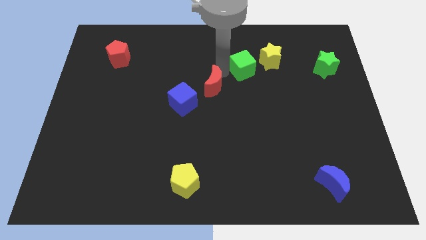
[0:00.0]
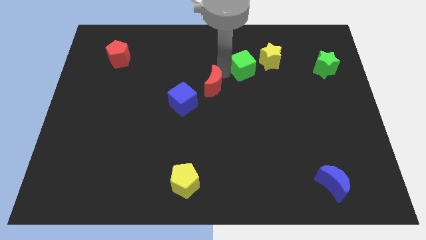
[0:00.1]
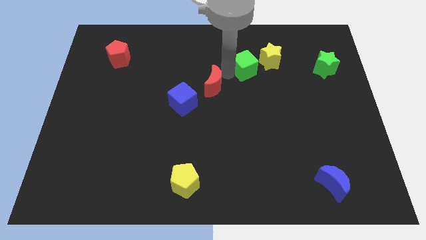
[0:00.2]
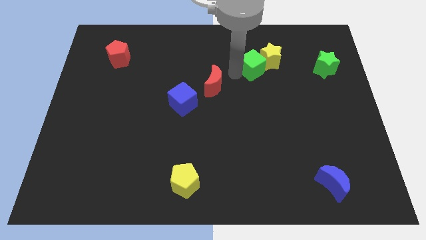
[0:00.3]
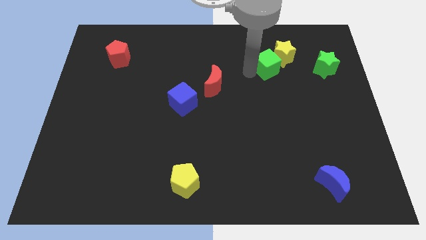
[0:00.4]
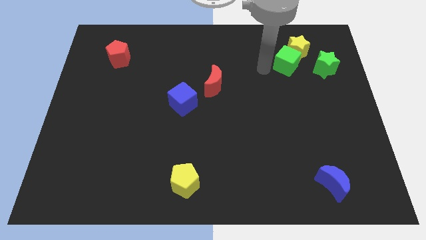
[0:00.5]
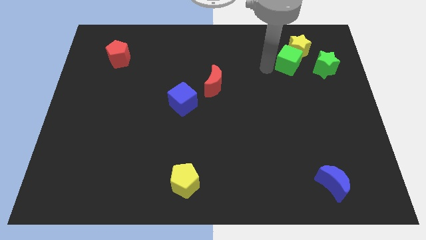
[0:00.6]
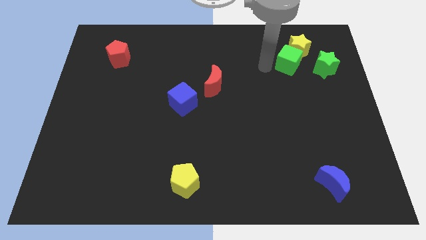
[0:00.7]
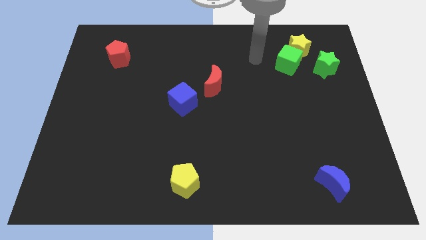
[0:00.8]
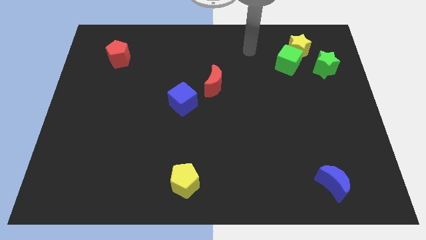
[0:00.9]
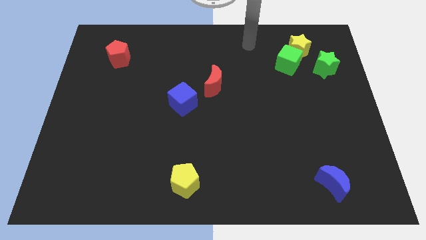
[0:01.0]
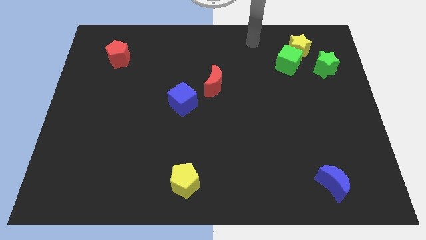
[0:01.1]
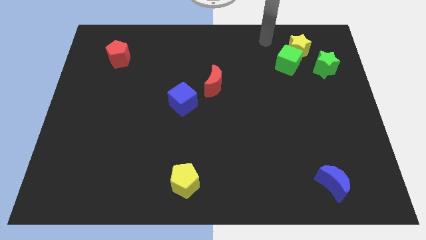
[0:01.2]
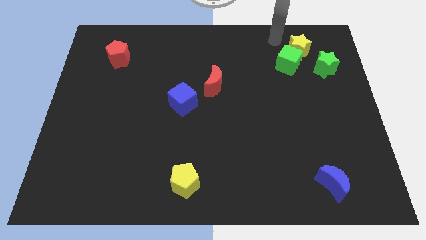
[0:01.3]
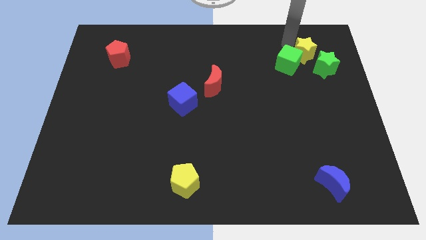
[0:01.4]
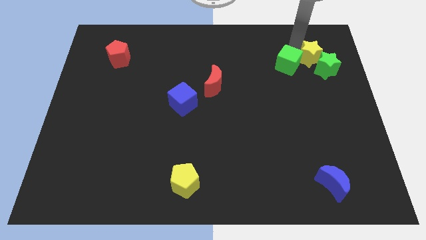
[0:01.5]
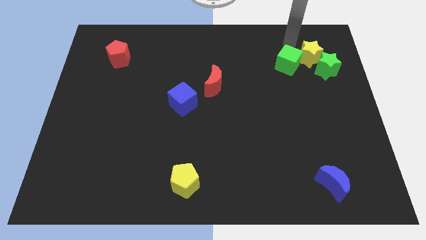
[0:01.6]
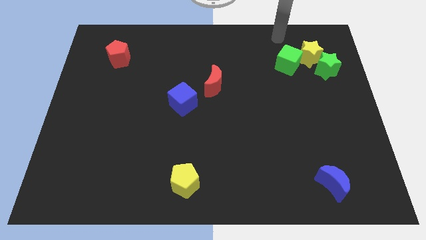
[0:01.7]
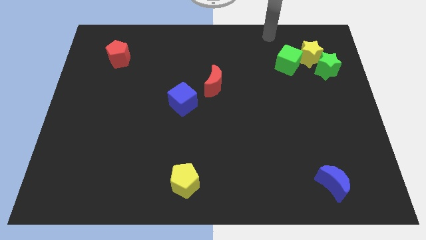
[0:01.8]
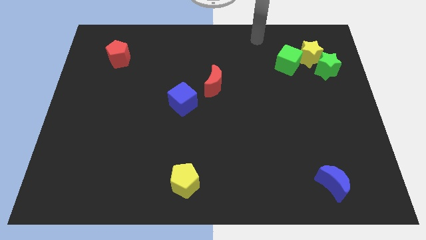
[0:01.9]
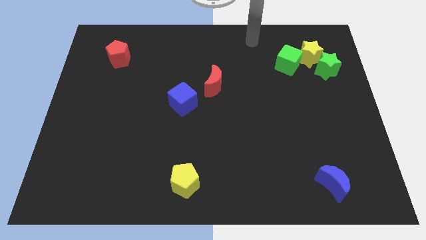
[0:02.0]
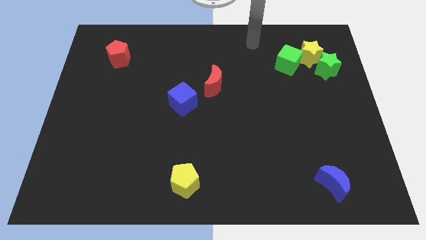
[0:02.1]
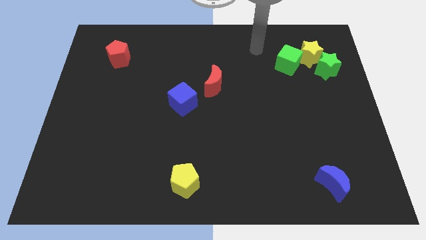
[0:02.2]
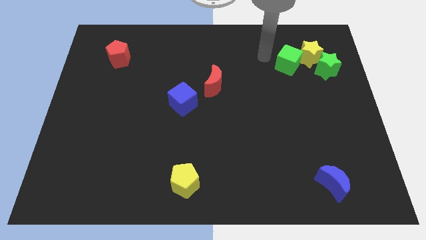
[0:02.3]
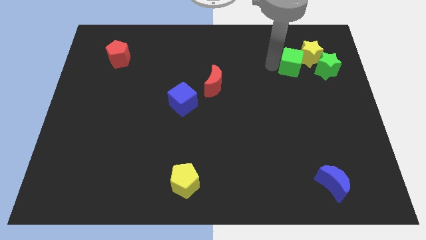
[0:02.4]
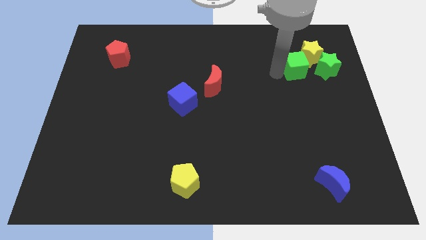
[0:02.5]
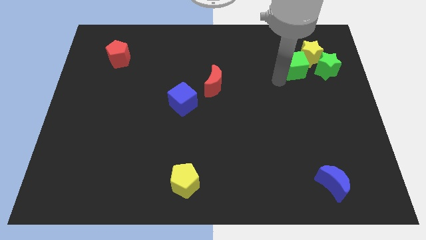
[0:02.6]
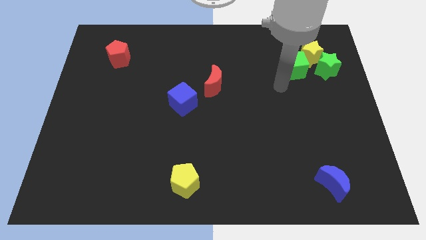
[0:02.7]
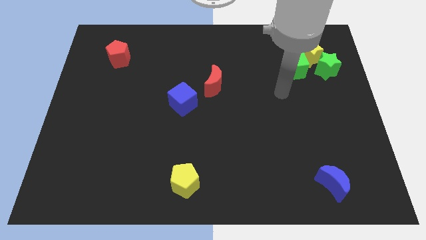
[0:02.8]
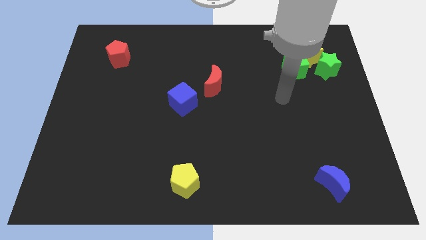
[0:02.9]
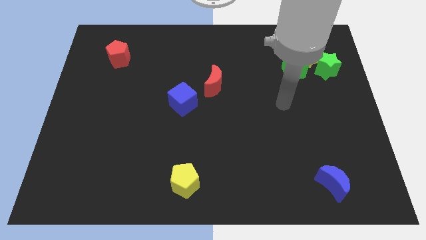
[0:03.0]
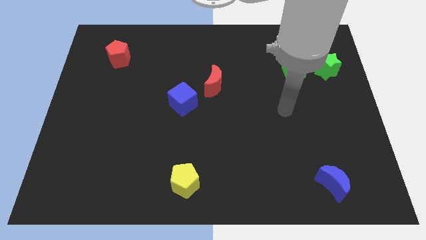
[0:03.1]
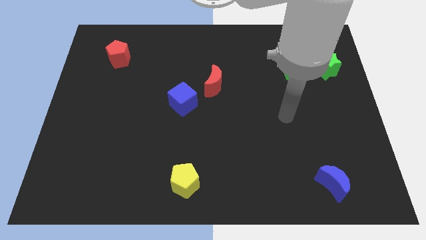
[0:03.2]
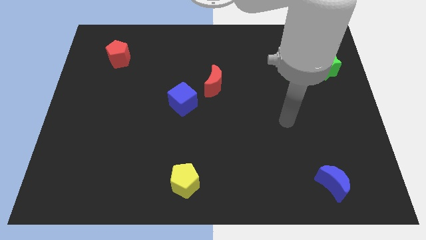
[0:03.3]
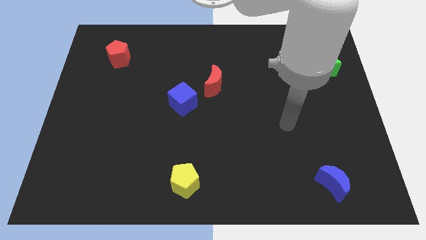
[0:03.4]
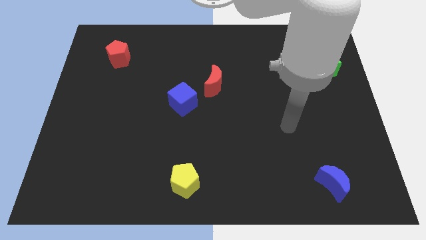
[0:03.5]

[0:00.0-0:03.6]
push green cube yellow star in to green star

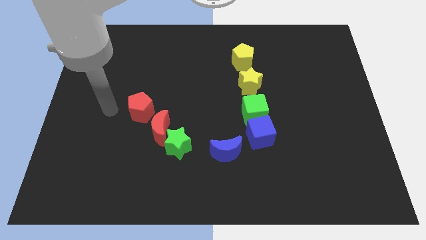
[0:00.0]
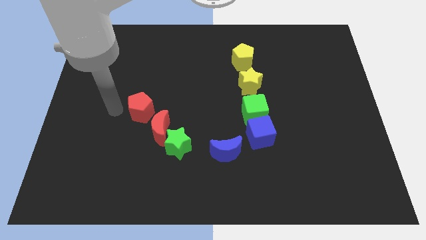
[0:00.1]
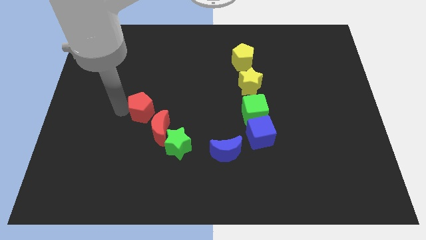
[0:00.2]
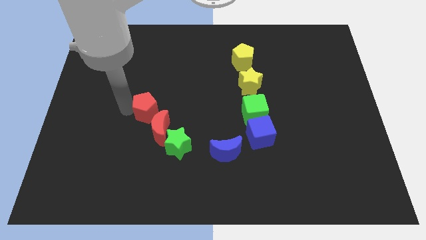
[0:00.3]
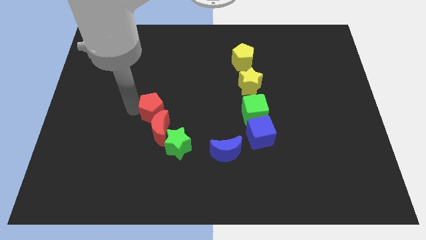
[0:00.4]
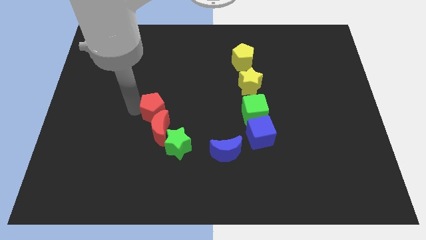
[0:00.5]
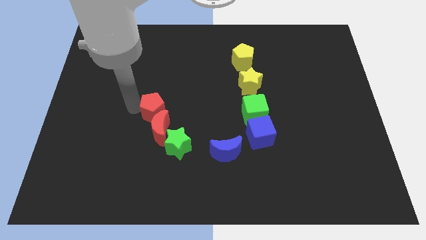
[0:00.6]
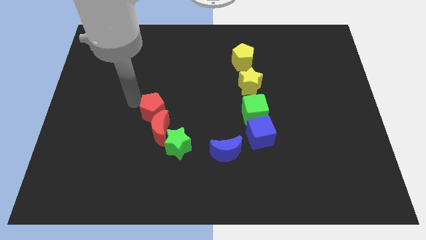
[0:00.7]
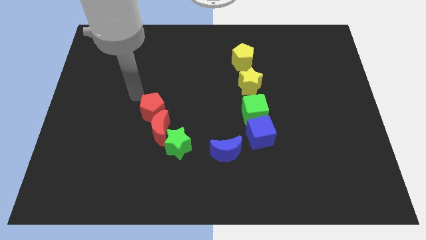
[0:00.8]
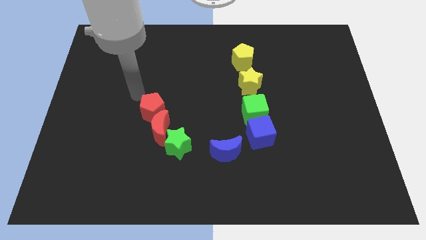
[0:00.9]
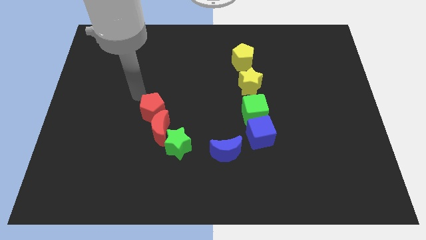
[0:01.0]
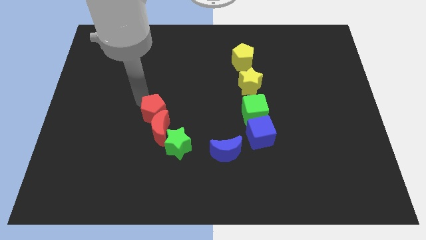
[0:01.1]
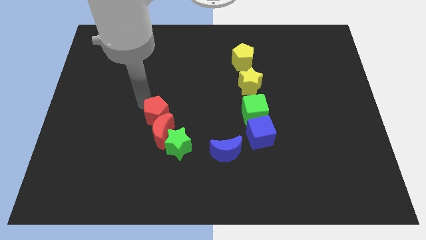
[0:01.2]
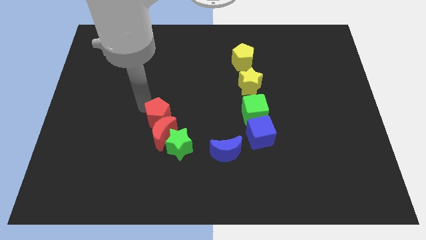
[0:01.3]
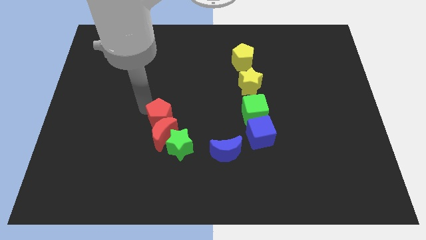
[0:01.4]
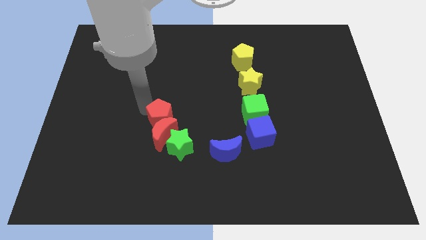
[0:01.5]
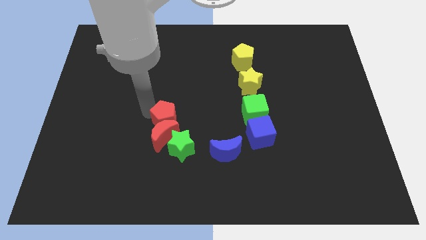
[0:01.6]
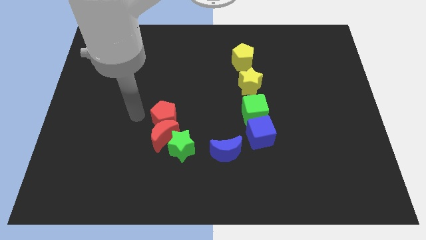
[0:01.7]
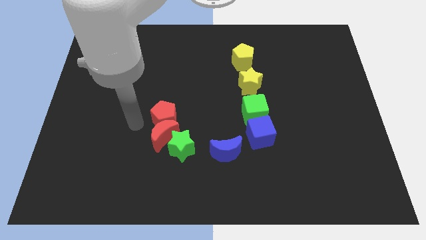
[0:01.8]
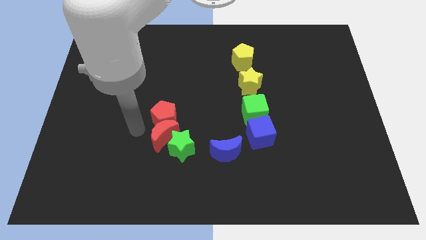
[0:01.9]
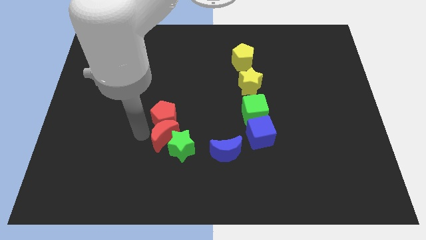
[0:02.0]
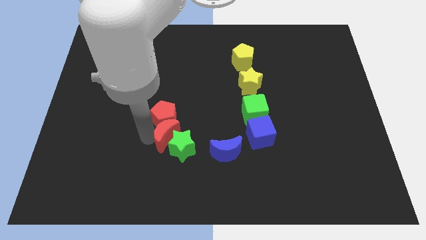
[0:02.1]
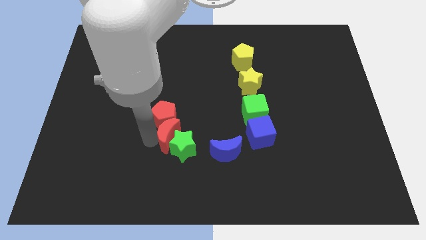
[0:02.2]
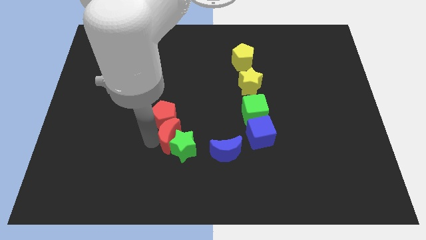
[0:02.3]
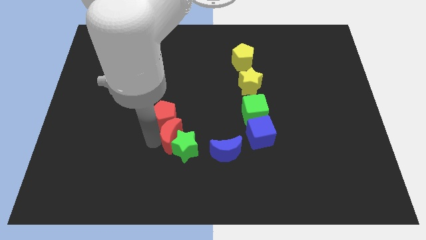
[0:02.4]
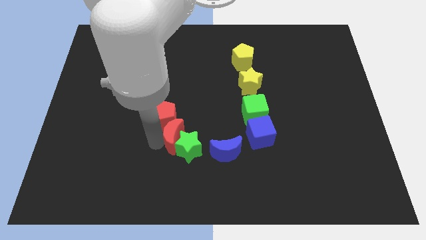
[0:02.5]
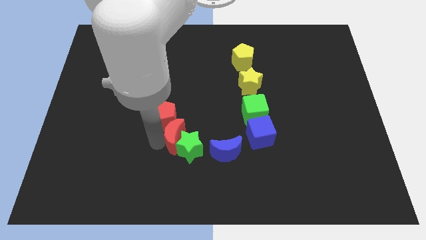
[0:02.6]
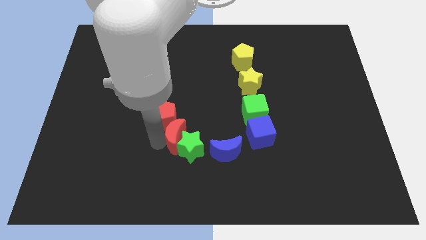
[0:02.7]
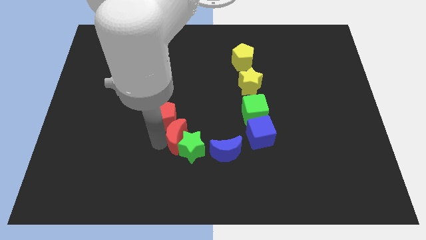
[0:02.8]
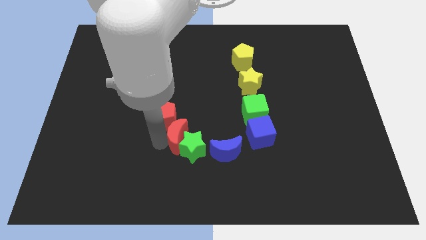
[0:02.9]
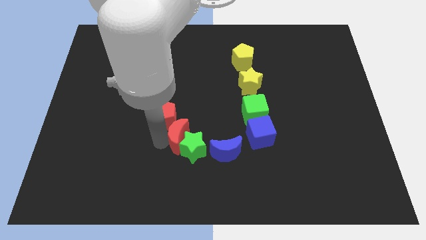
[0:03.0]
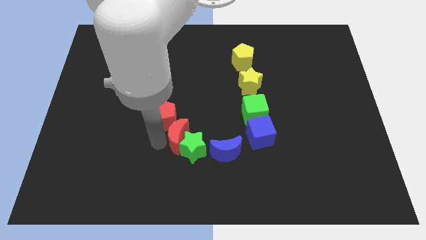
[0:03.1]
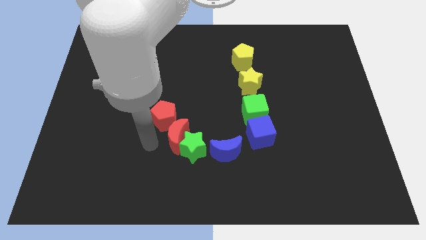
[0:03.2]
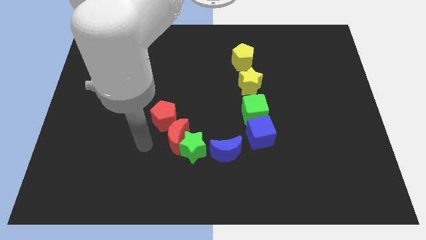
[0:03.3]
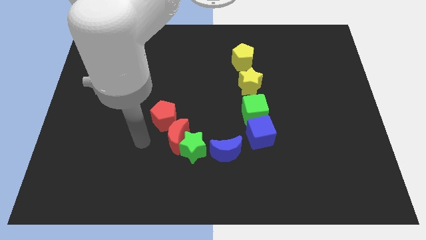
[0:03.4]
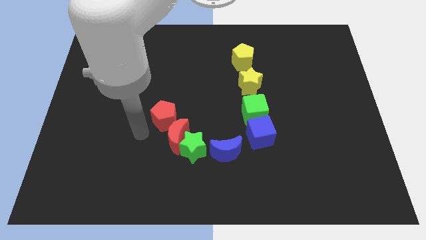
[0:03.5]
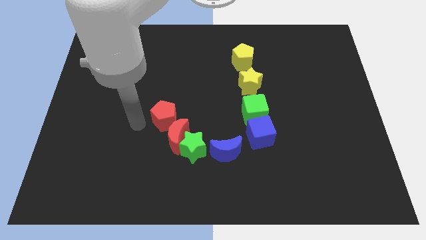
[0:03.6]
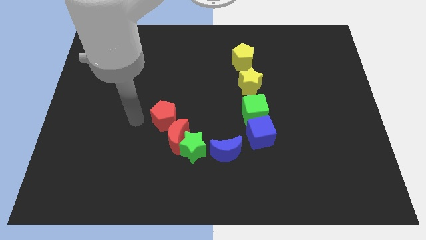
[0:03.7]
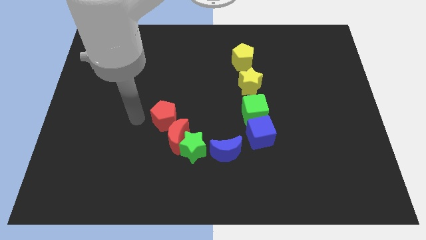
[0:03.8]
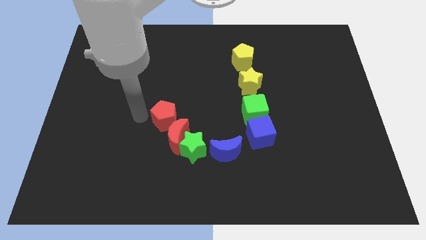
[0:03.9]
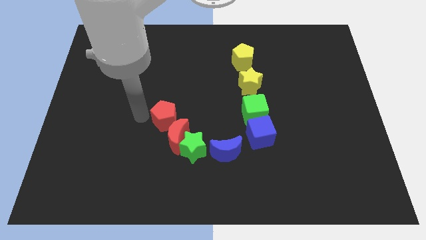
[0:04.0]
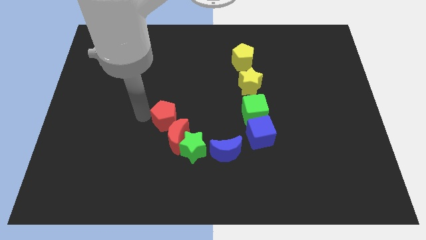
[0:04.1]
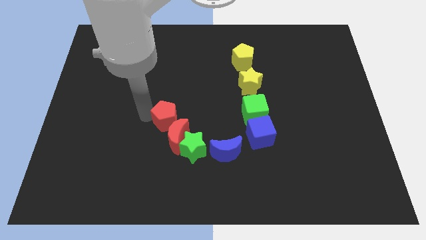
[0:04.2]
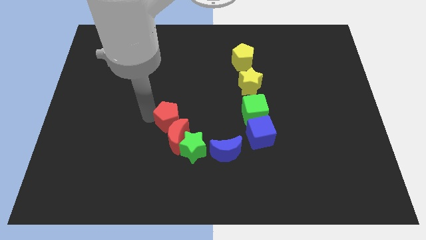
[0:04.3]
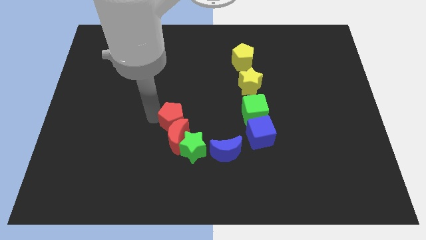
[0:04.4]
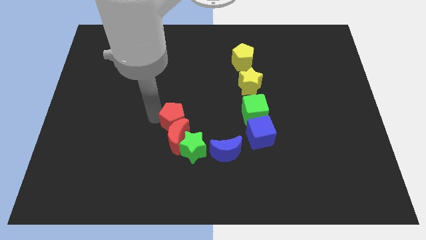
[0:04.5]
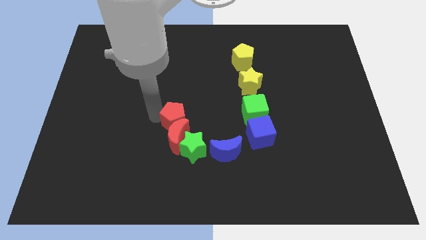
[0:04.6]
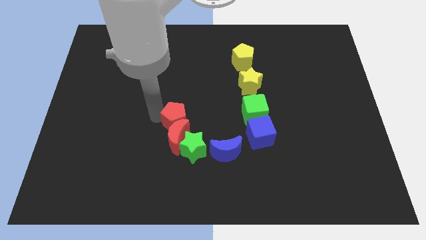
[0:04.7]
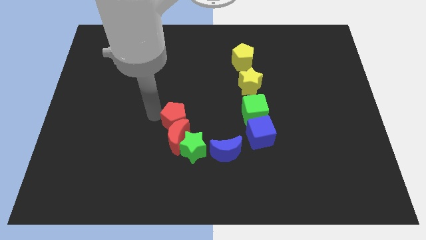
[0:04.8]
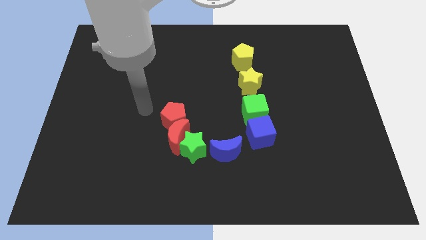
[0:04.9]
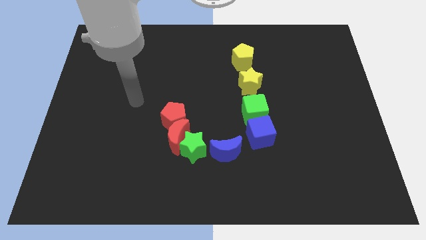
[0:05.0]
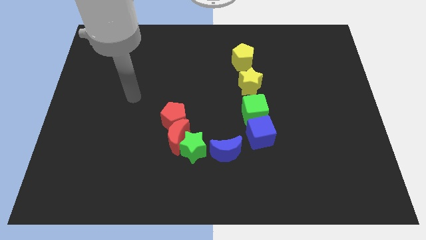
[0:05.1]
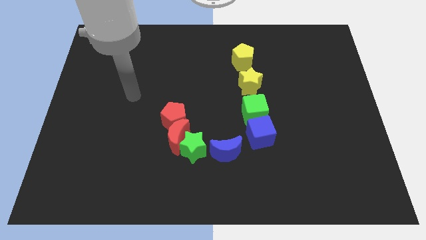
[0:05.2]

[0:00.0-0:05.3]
push the red blocks together into the green star

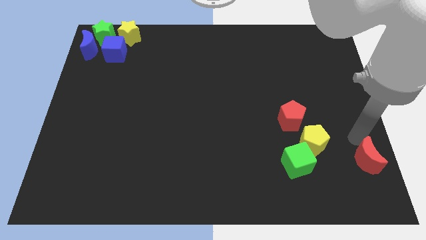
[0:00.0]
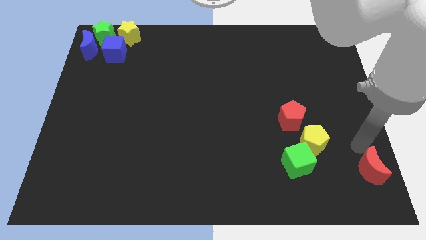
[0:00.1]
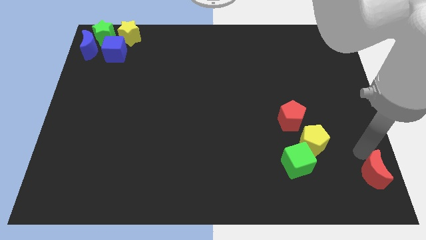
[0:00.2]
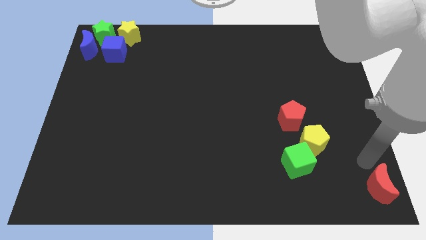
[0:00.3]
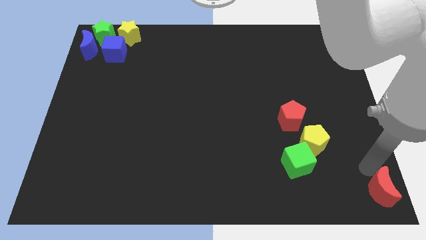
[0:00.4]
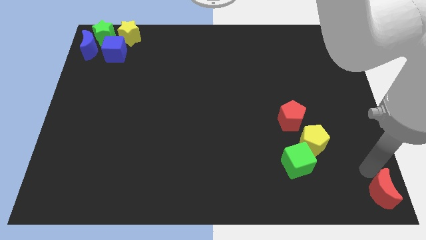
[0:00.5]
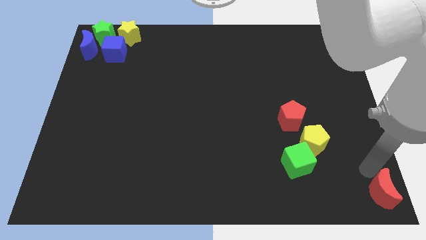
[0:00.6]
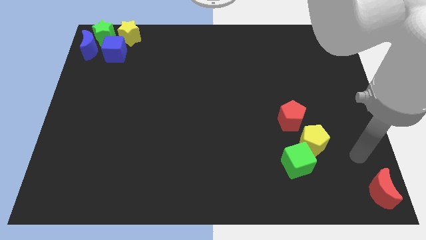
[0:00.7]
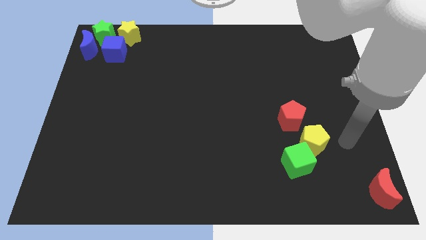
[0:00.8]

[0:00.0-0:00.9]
push red moon to the bottom right corner of the board
